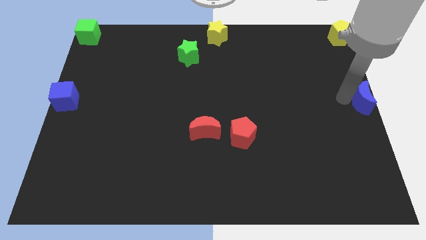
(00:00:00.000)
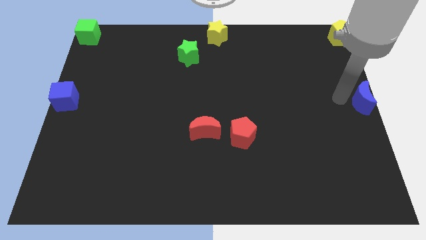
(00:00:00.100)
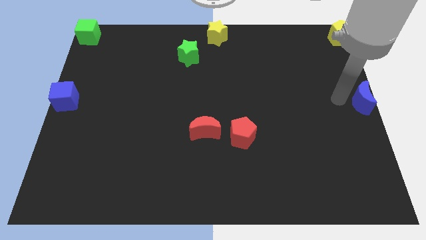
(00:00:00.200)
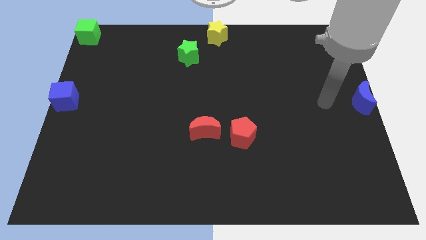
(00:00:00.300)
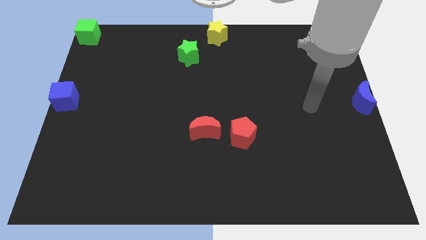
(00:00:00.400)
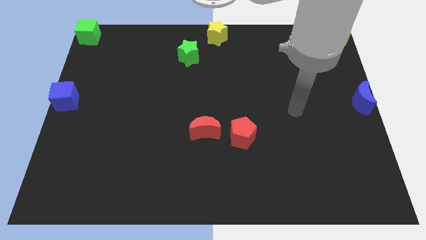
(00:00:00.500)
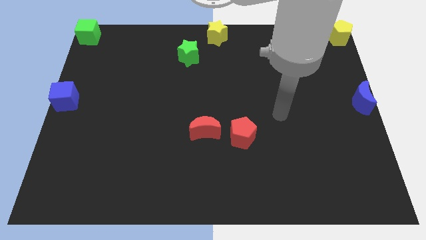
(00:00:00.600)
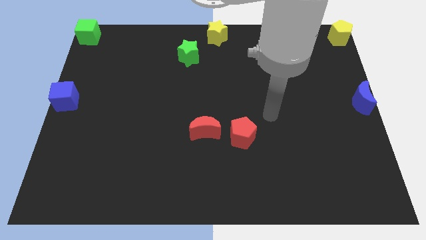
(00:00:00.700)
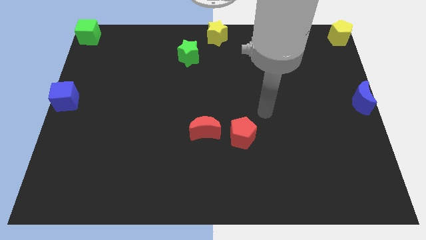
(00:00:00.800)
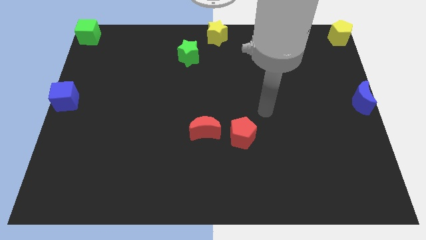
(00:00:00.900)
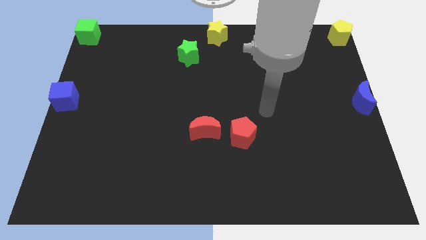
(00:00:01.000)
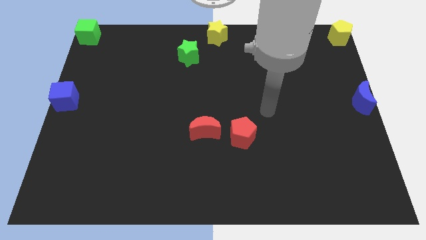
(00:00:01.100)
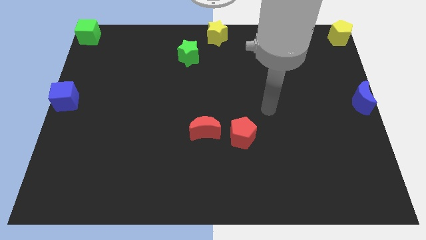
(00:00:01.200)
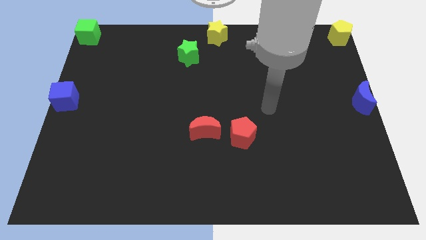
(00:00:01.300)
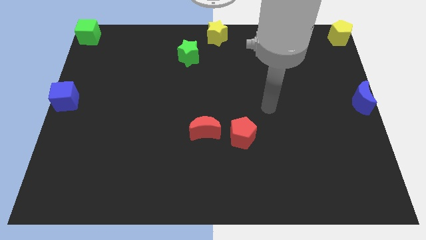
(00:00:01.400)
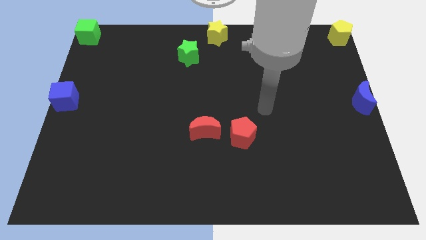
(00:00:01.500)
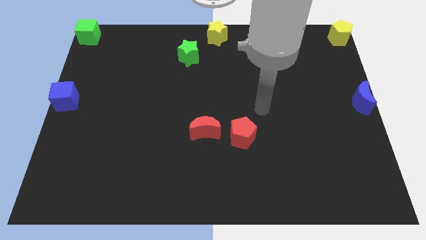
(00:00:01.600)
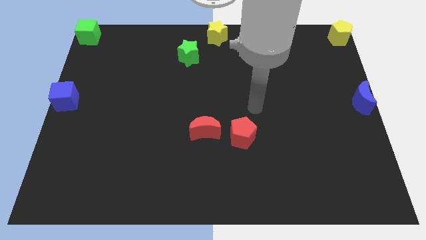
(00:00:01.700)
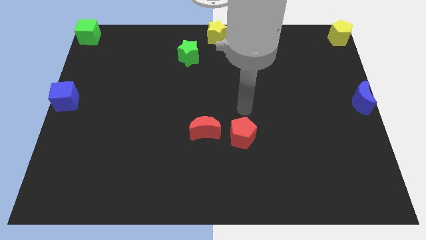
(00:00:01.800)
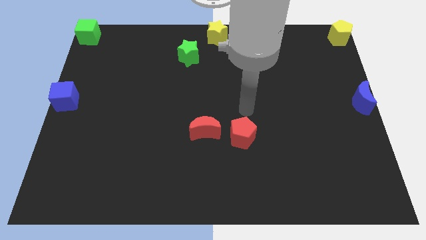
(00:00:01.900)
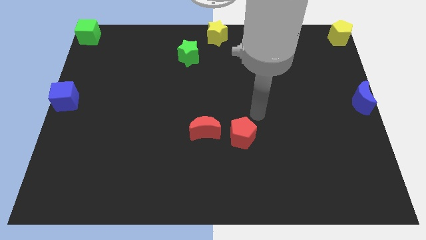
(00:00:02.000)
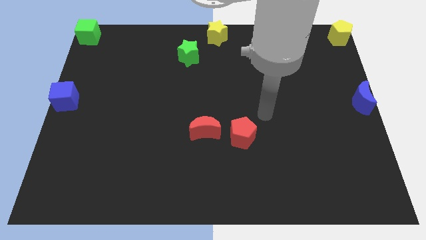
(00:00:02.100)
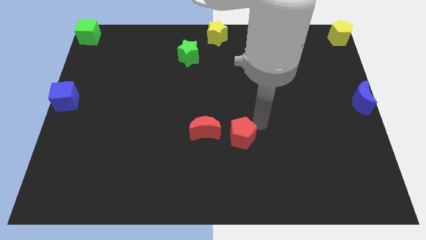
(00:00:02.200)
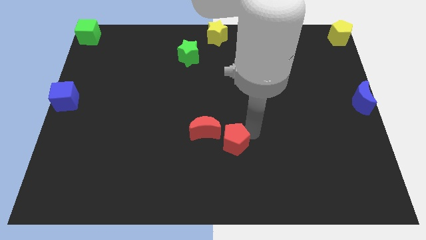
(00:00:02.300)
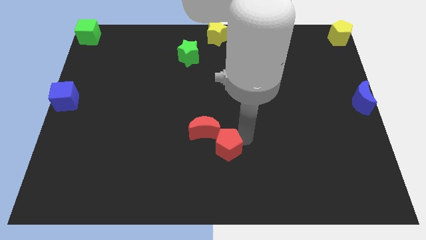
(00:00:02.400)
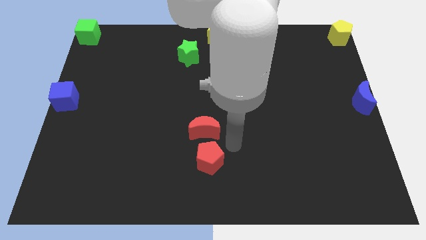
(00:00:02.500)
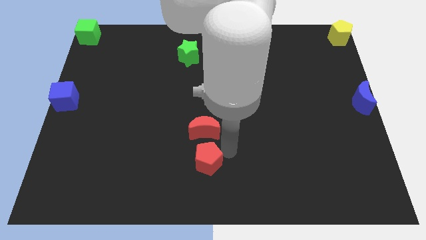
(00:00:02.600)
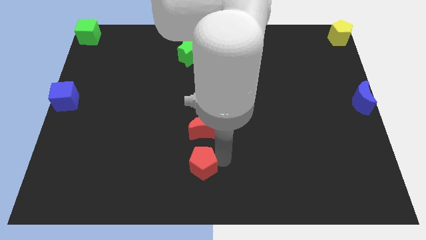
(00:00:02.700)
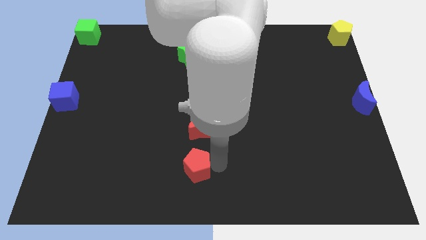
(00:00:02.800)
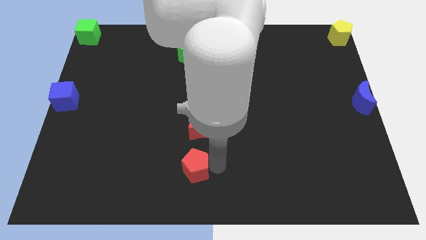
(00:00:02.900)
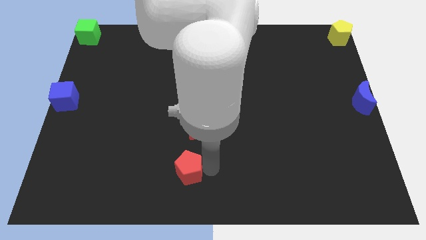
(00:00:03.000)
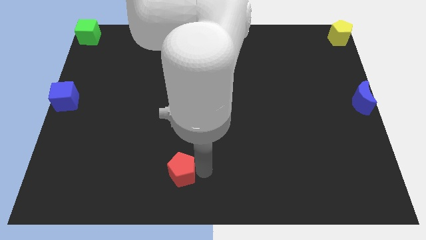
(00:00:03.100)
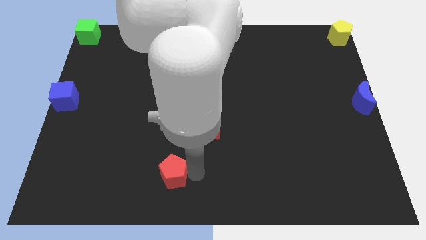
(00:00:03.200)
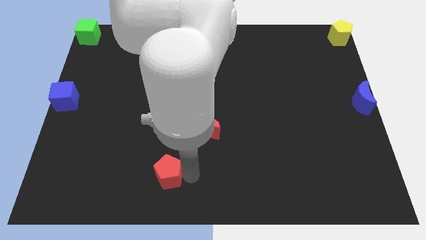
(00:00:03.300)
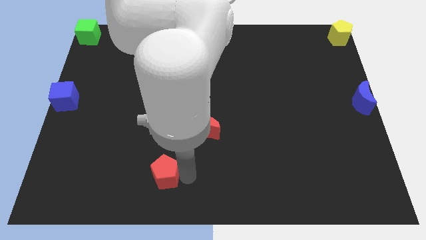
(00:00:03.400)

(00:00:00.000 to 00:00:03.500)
move arm near red pentagon

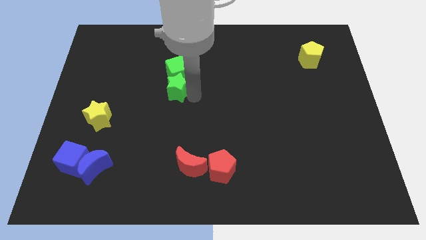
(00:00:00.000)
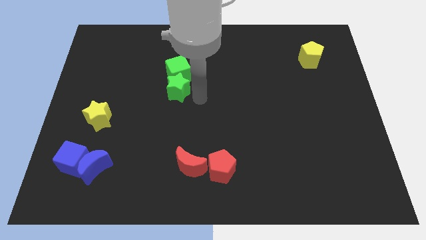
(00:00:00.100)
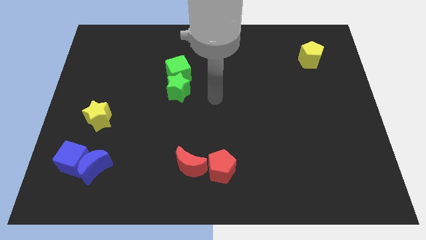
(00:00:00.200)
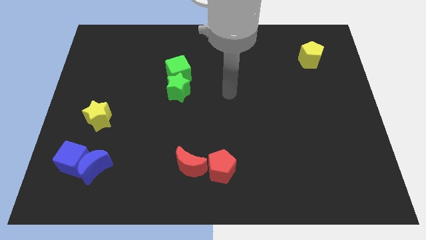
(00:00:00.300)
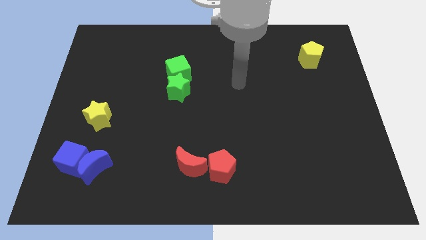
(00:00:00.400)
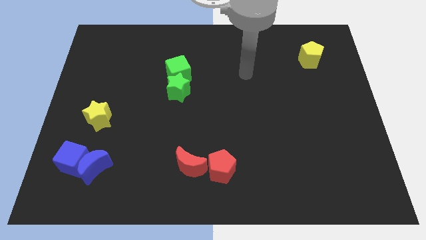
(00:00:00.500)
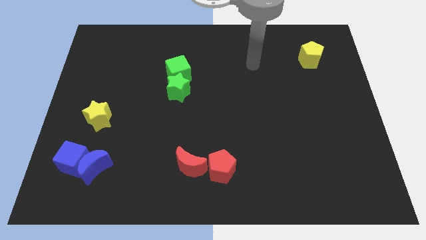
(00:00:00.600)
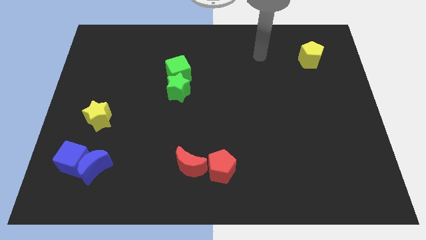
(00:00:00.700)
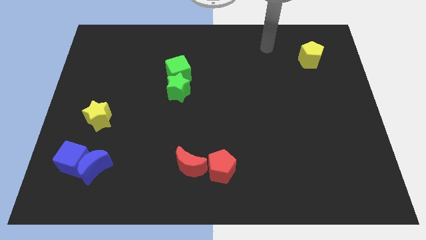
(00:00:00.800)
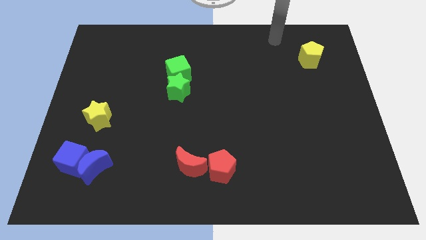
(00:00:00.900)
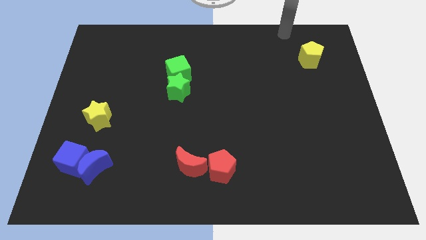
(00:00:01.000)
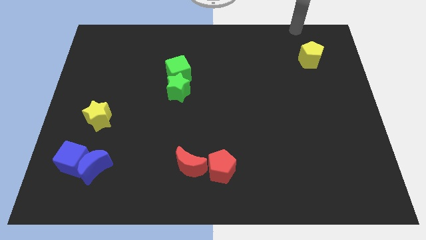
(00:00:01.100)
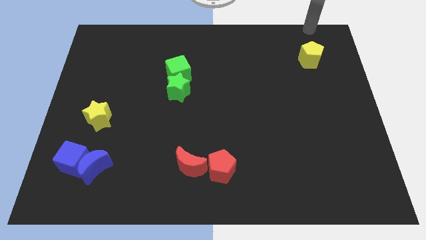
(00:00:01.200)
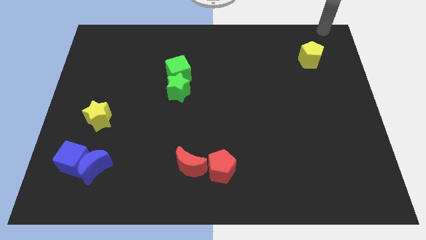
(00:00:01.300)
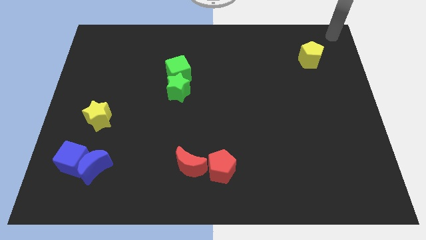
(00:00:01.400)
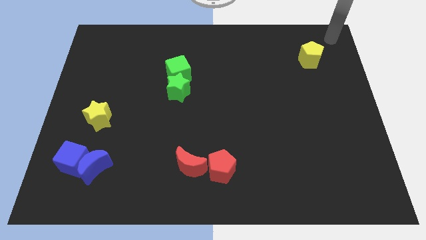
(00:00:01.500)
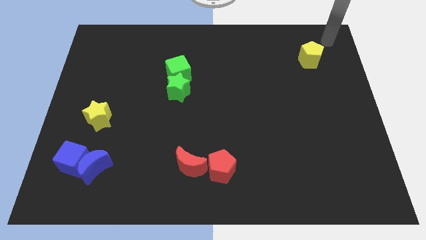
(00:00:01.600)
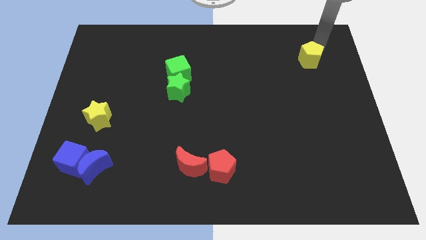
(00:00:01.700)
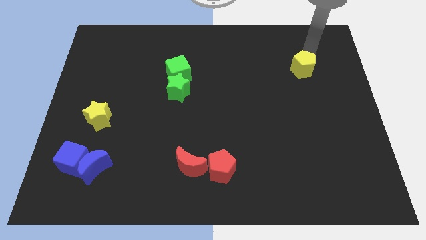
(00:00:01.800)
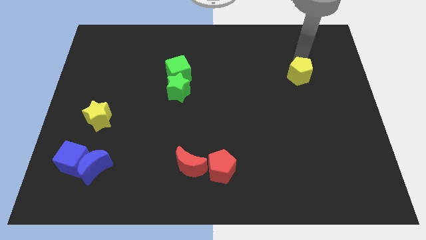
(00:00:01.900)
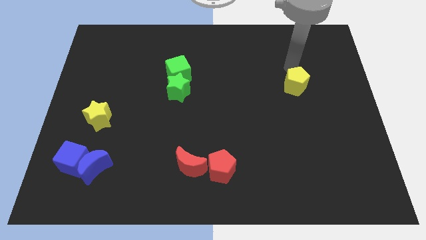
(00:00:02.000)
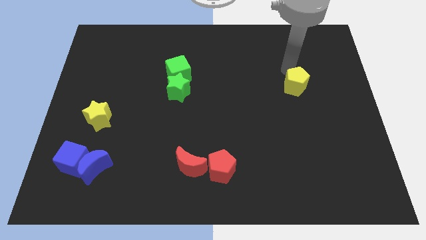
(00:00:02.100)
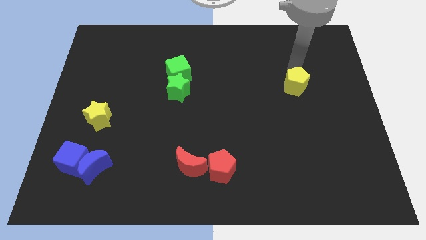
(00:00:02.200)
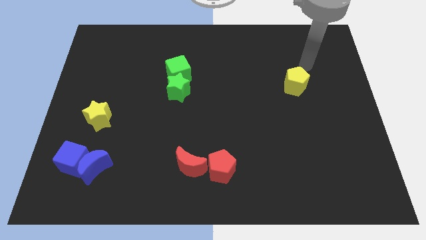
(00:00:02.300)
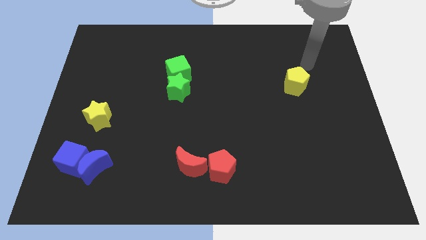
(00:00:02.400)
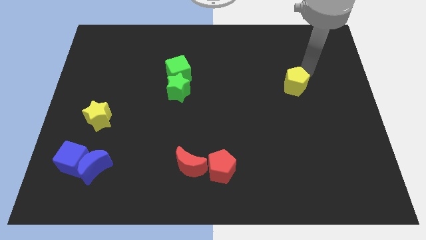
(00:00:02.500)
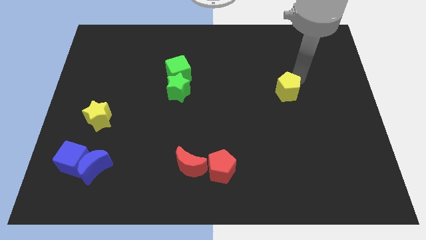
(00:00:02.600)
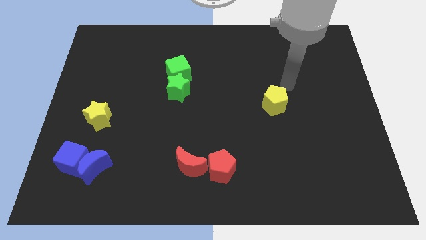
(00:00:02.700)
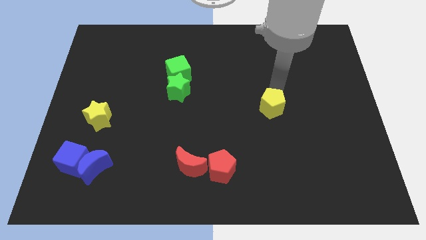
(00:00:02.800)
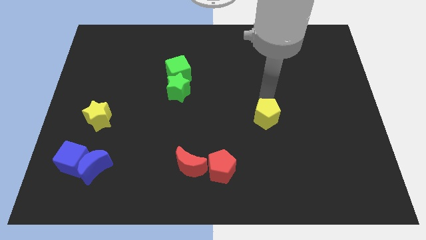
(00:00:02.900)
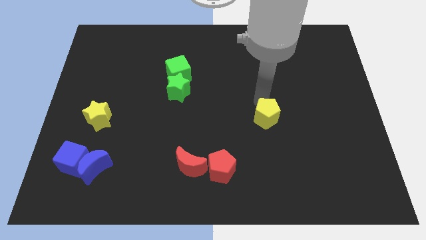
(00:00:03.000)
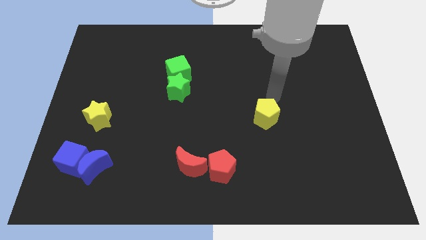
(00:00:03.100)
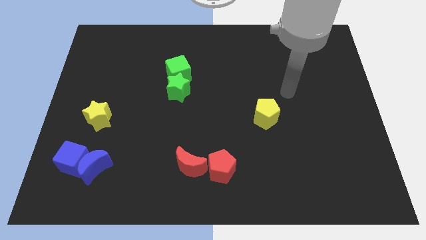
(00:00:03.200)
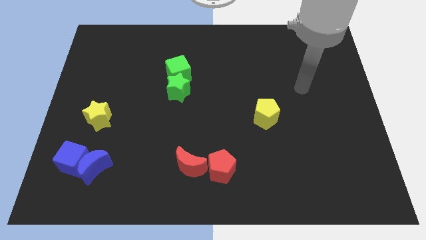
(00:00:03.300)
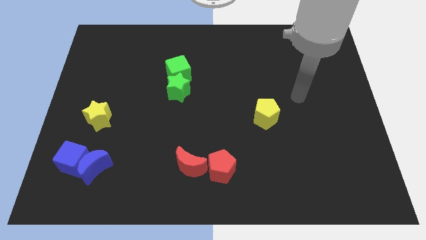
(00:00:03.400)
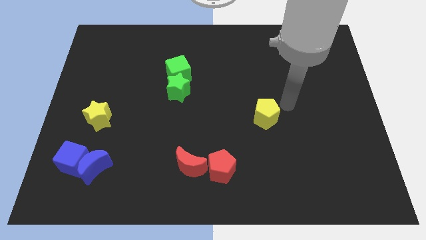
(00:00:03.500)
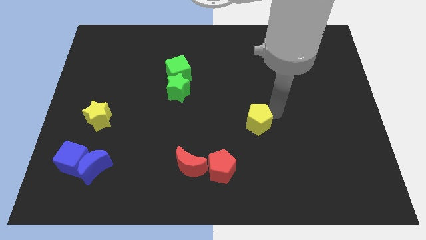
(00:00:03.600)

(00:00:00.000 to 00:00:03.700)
push the yellow pentagon right above the red pentagon

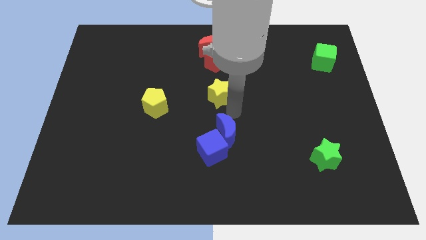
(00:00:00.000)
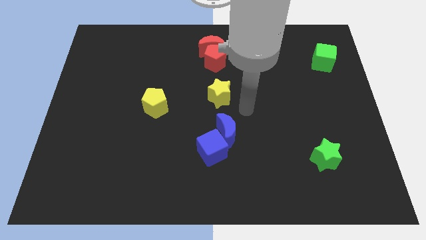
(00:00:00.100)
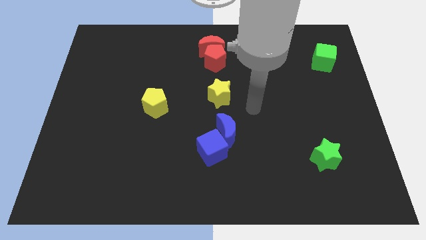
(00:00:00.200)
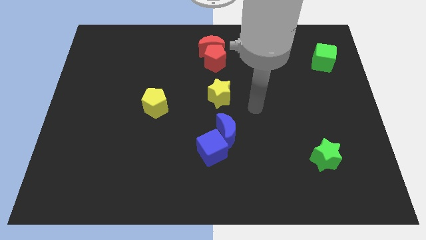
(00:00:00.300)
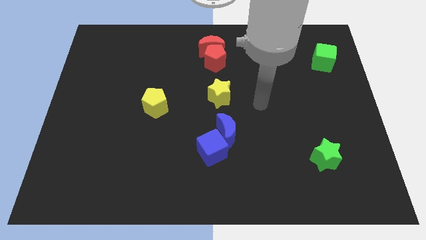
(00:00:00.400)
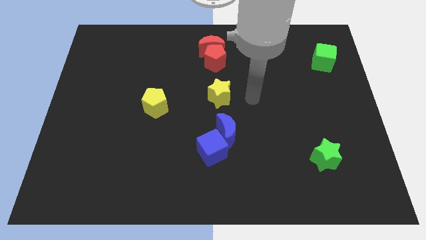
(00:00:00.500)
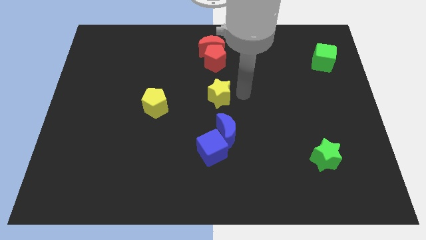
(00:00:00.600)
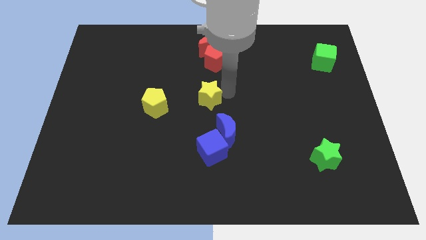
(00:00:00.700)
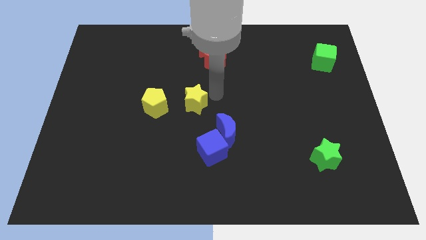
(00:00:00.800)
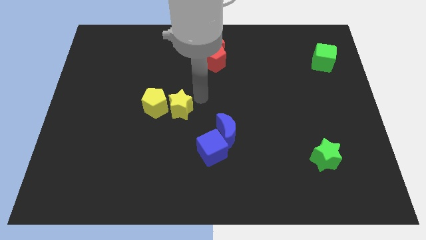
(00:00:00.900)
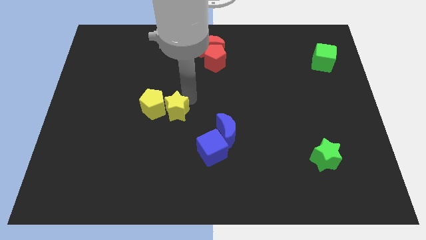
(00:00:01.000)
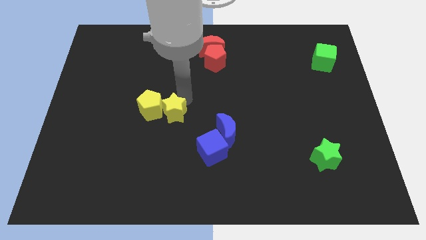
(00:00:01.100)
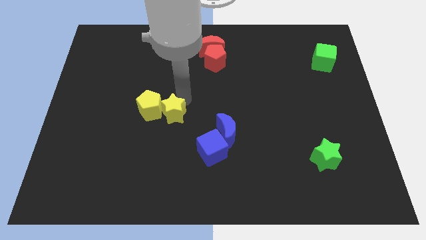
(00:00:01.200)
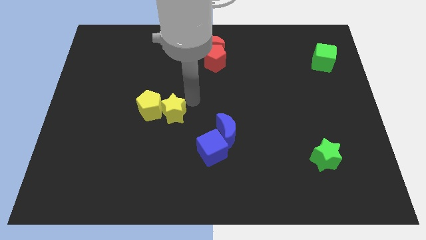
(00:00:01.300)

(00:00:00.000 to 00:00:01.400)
push the yellow star into the yellow pentagon

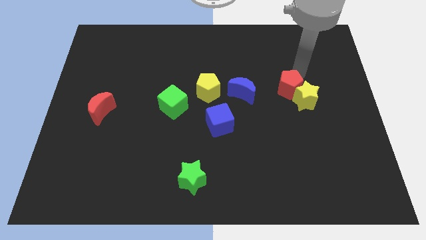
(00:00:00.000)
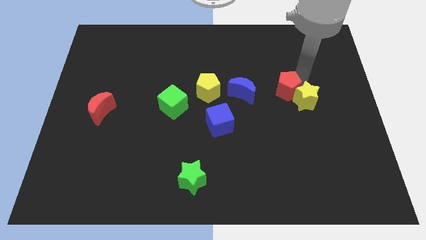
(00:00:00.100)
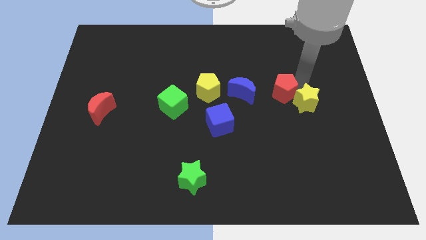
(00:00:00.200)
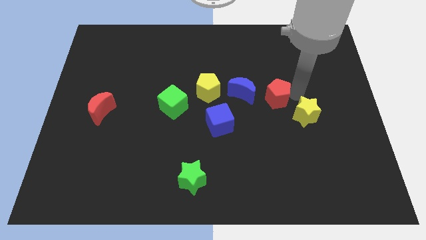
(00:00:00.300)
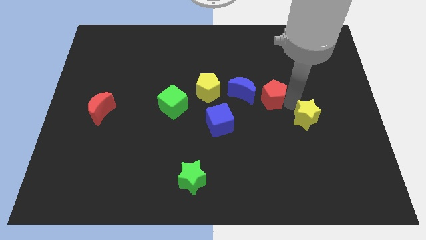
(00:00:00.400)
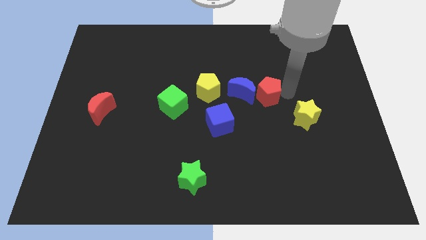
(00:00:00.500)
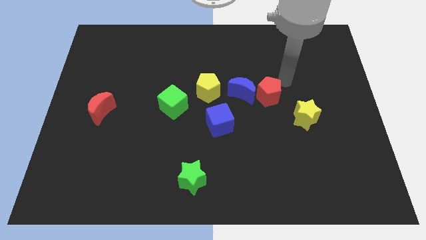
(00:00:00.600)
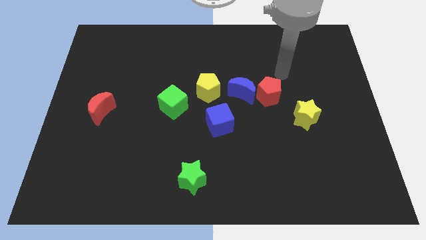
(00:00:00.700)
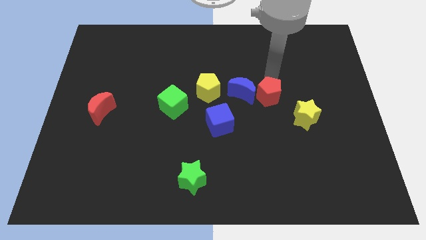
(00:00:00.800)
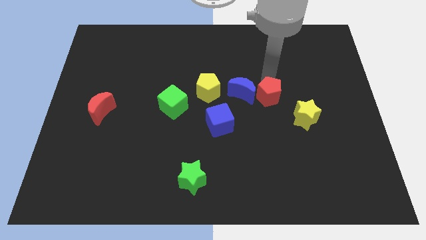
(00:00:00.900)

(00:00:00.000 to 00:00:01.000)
separate the red pentagon and the yellow star
